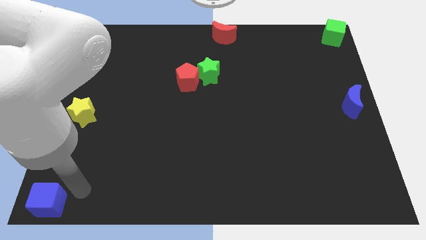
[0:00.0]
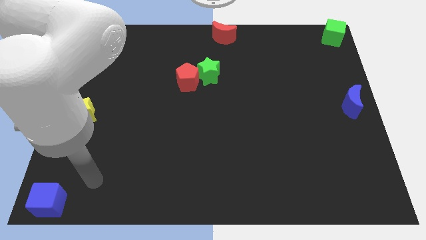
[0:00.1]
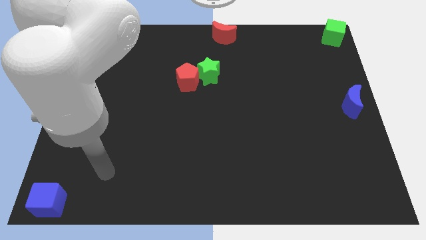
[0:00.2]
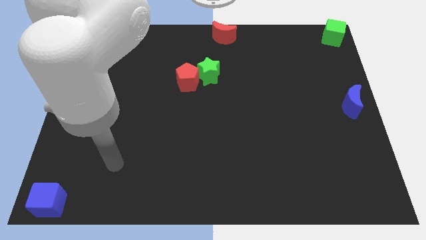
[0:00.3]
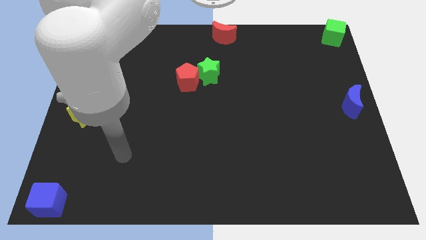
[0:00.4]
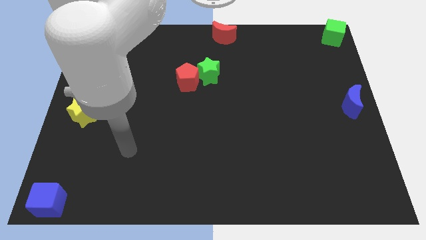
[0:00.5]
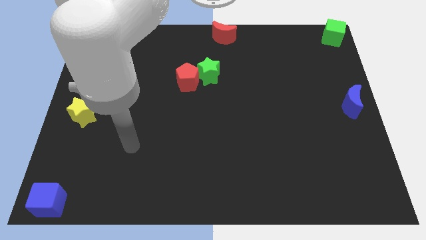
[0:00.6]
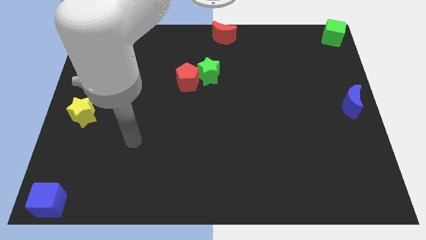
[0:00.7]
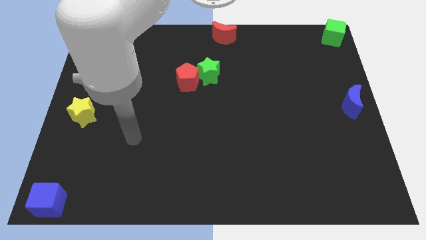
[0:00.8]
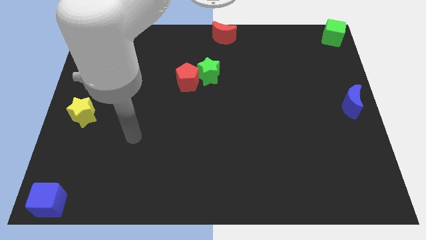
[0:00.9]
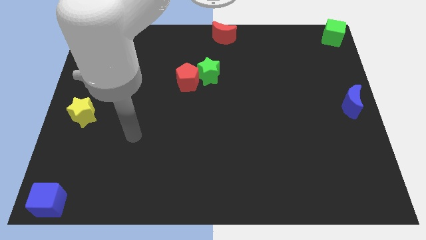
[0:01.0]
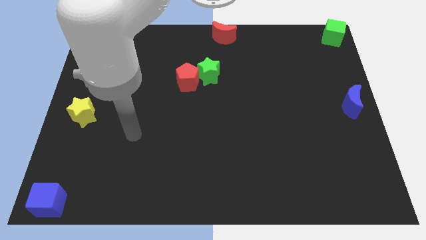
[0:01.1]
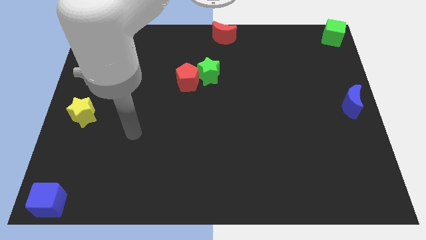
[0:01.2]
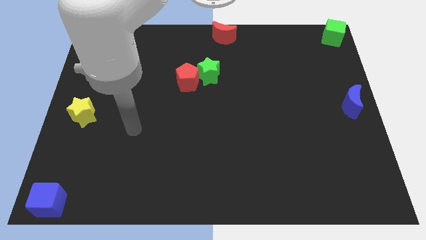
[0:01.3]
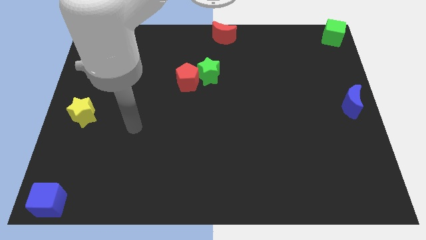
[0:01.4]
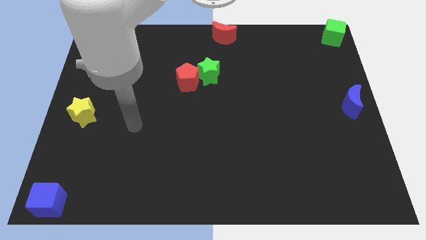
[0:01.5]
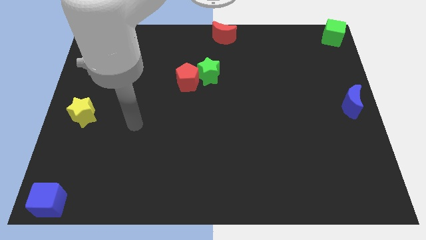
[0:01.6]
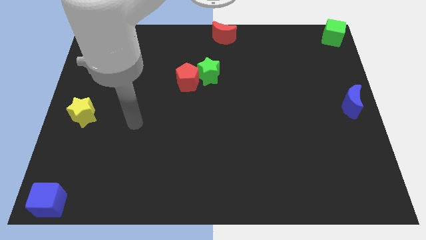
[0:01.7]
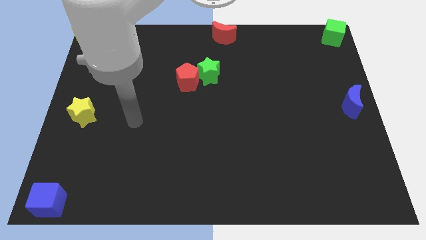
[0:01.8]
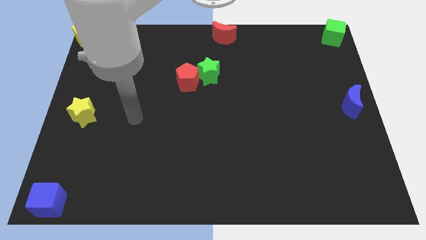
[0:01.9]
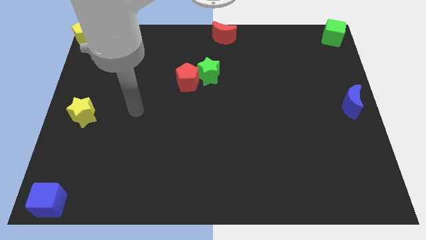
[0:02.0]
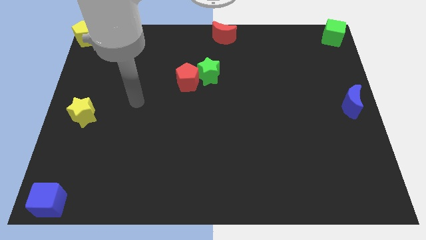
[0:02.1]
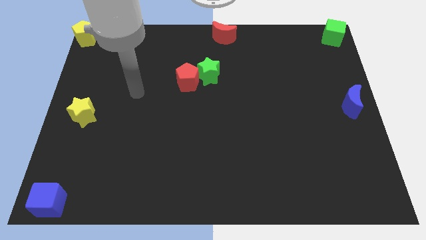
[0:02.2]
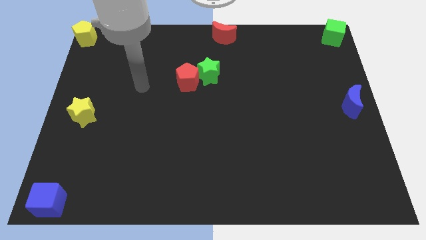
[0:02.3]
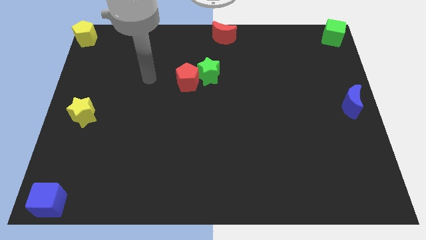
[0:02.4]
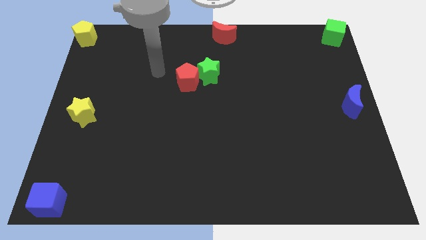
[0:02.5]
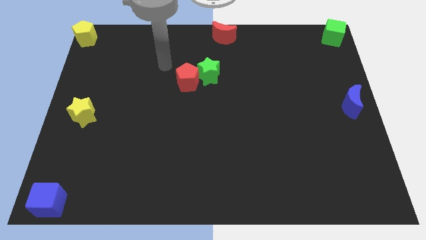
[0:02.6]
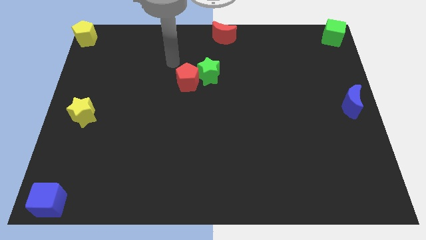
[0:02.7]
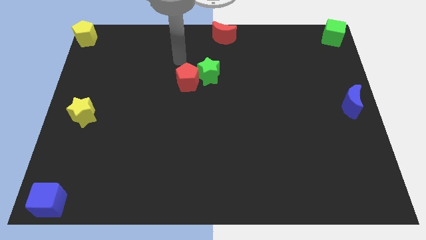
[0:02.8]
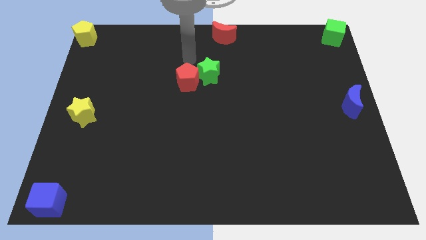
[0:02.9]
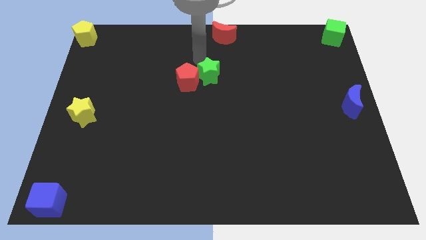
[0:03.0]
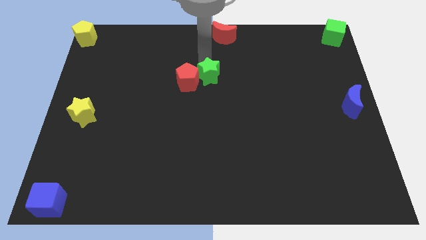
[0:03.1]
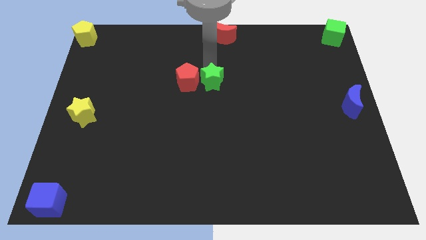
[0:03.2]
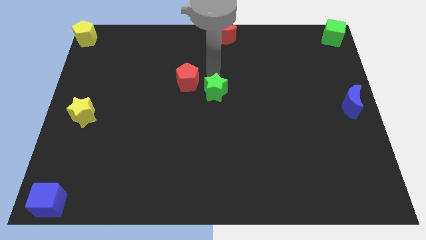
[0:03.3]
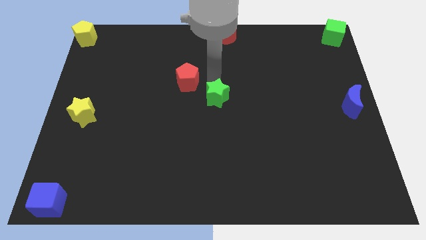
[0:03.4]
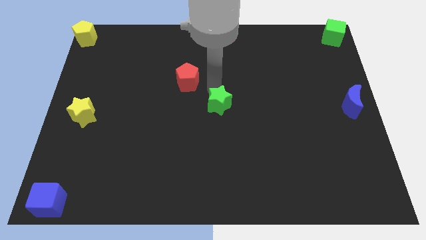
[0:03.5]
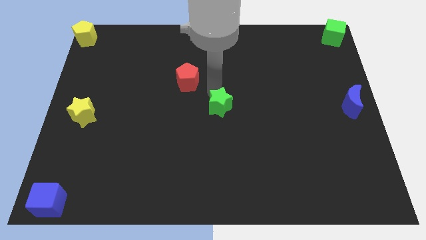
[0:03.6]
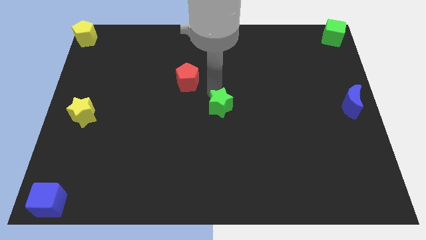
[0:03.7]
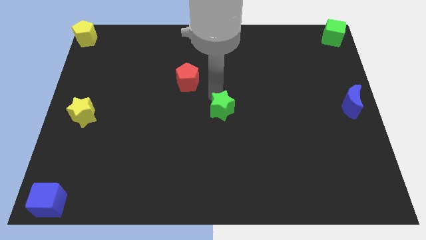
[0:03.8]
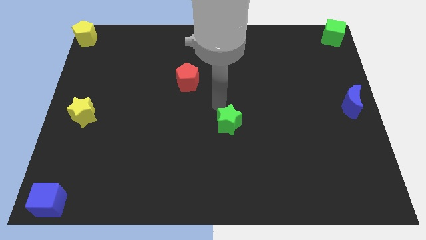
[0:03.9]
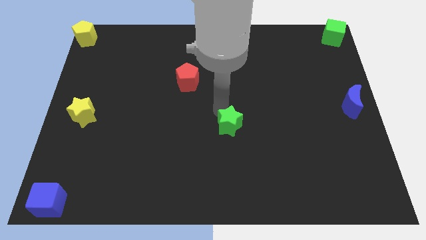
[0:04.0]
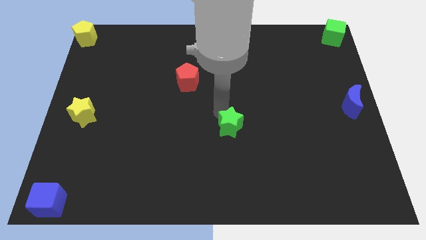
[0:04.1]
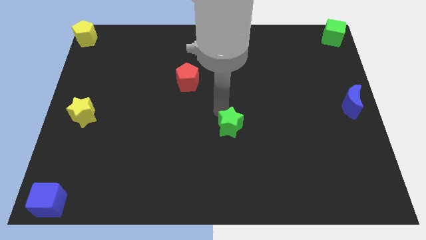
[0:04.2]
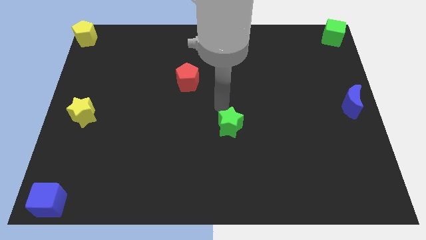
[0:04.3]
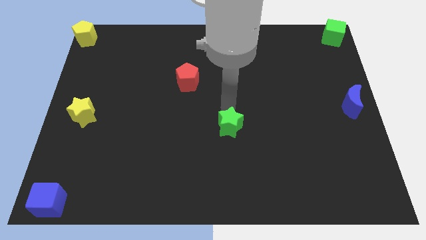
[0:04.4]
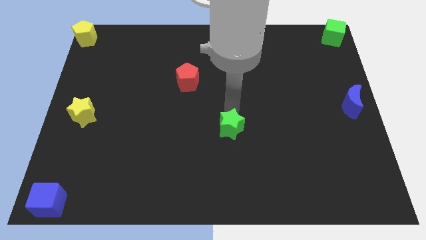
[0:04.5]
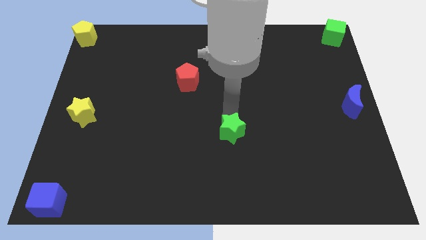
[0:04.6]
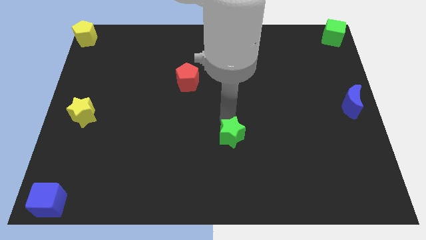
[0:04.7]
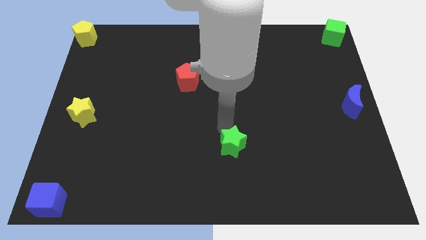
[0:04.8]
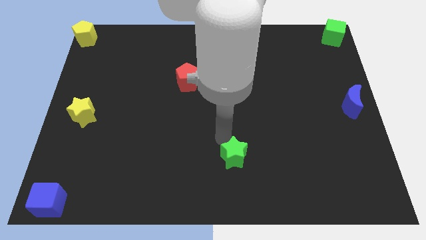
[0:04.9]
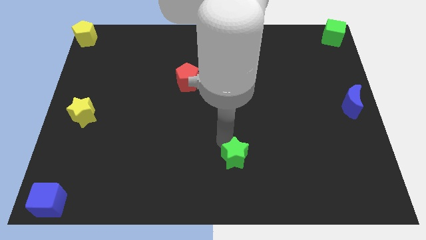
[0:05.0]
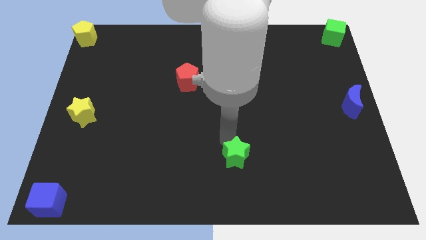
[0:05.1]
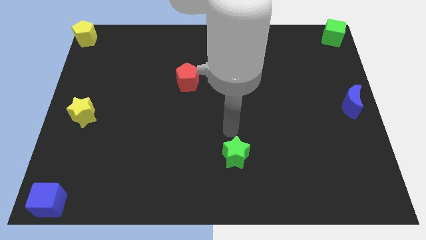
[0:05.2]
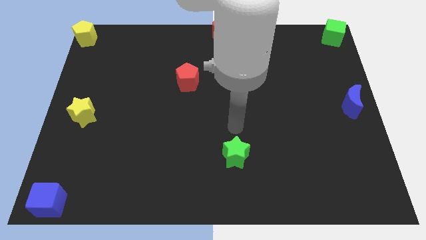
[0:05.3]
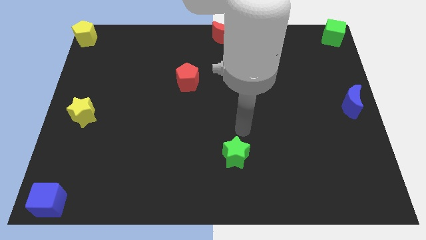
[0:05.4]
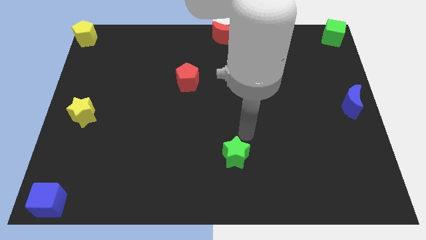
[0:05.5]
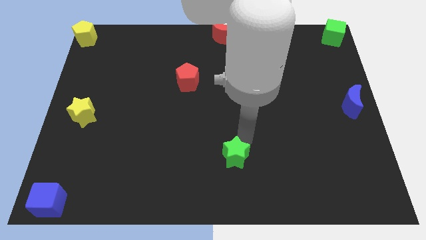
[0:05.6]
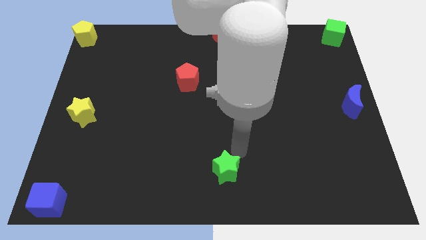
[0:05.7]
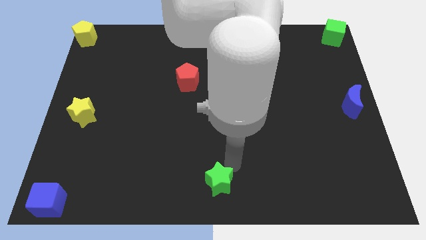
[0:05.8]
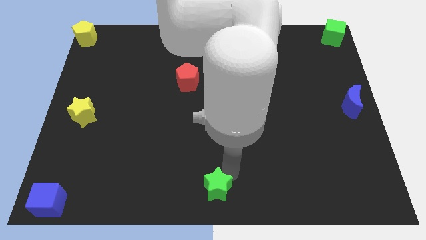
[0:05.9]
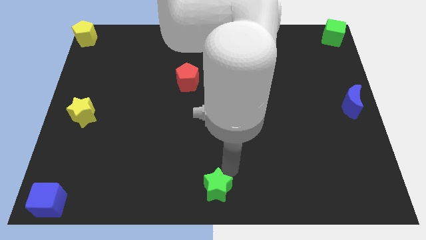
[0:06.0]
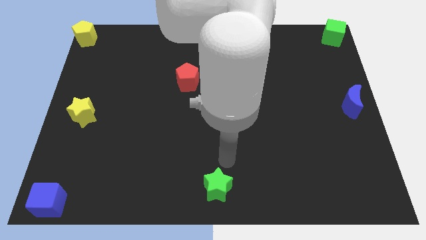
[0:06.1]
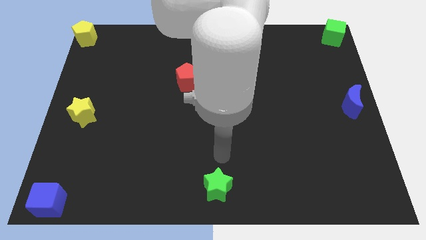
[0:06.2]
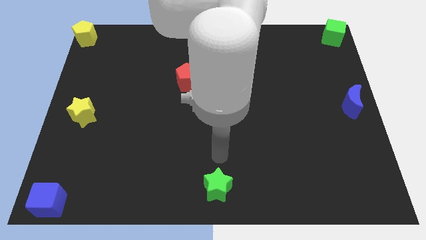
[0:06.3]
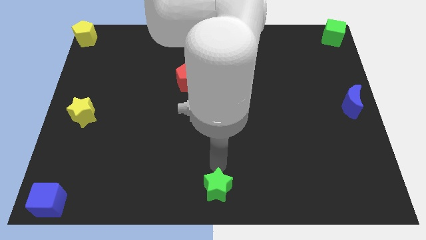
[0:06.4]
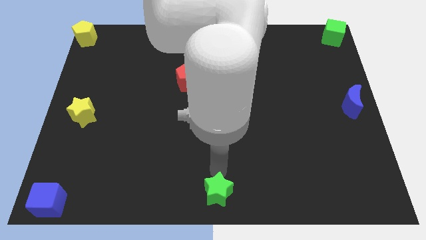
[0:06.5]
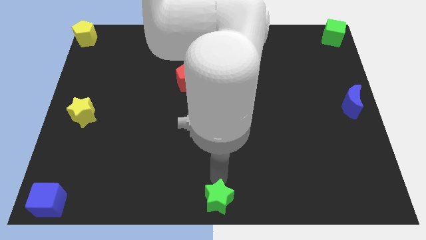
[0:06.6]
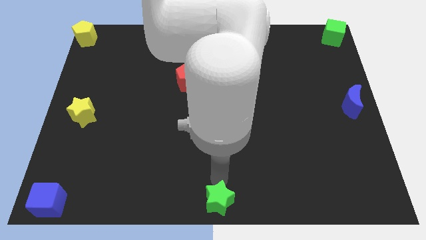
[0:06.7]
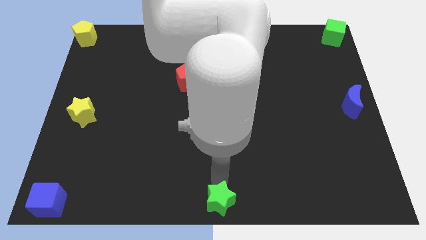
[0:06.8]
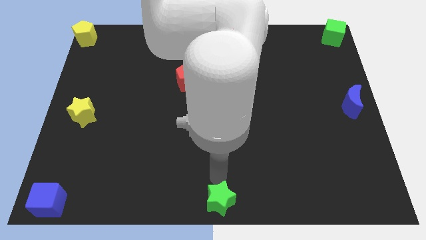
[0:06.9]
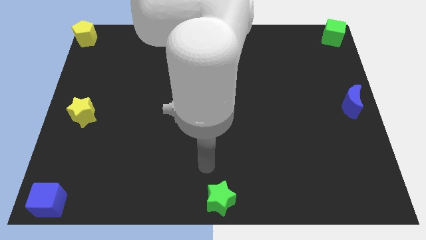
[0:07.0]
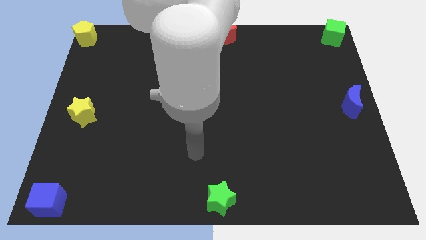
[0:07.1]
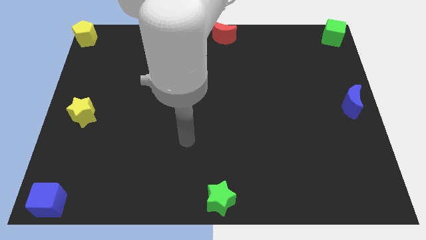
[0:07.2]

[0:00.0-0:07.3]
drag the green star to the bottom center

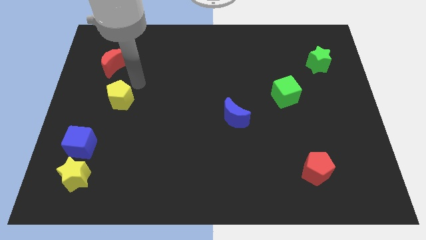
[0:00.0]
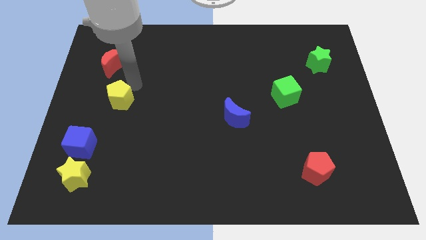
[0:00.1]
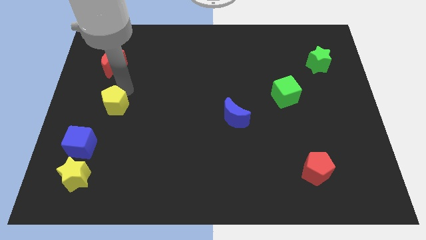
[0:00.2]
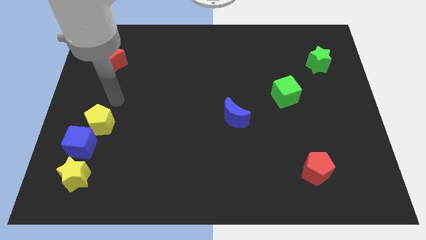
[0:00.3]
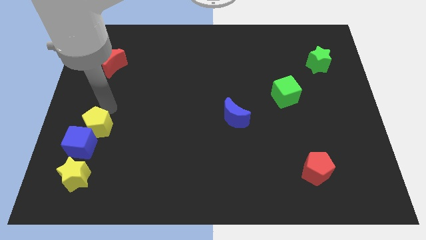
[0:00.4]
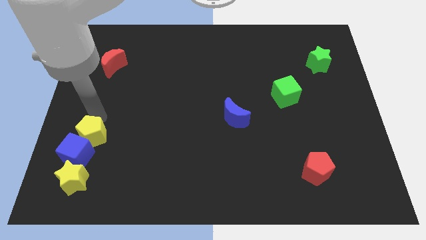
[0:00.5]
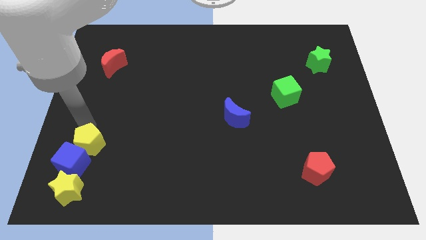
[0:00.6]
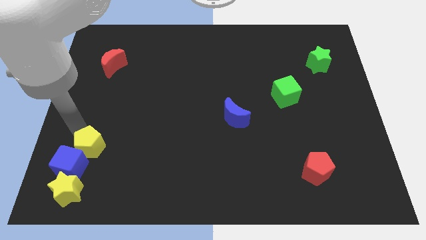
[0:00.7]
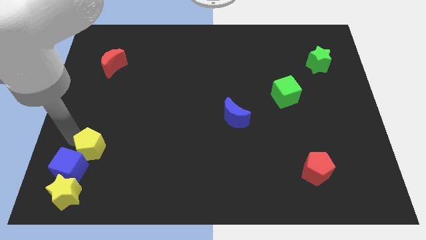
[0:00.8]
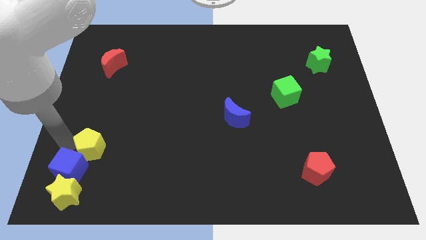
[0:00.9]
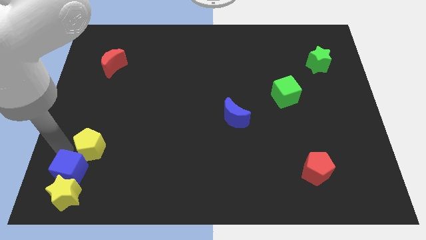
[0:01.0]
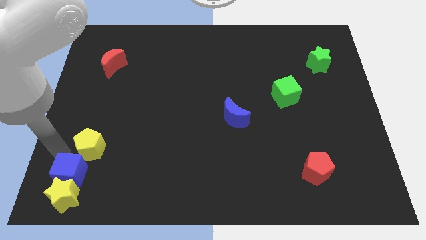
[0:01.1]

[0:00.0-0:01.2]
push yellow pentagon in to blue cube

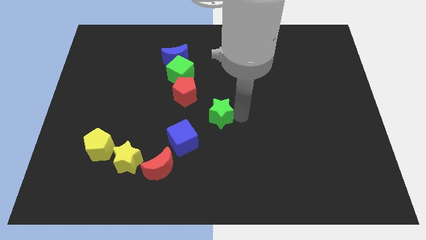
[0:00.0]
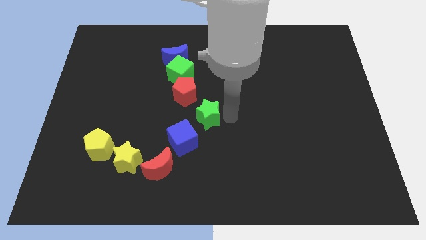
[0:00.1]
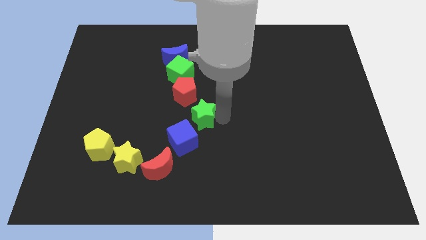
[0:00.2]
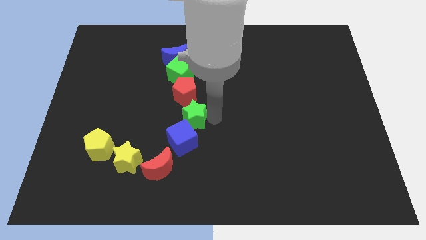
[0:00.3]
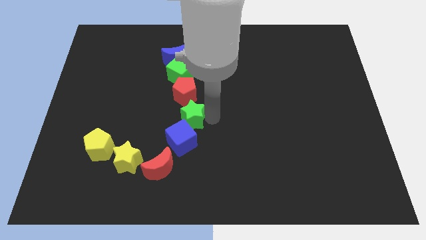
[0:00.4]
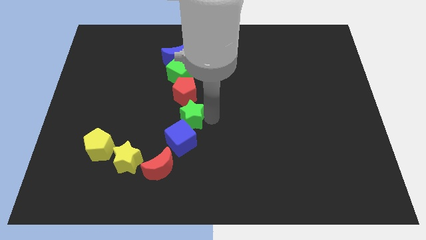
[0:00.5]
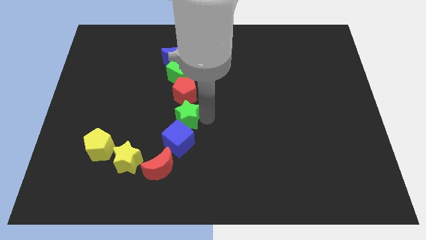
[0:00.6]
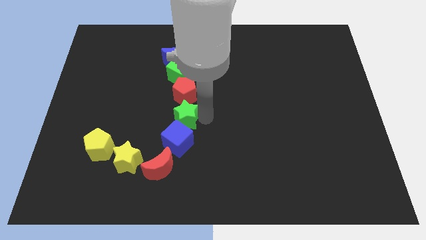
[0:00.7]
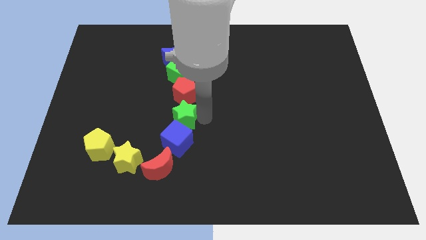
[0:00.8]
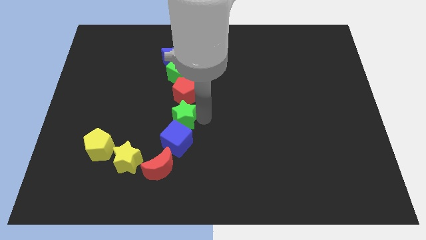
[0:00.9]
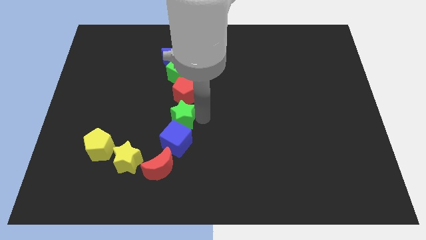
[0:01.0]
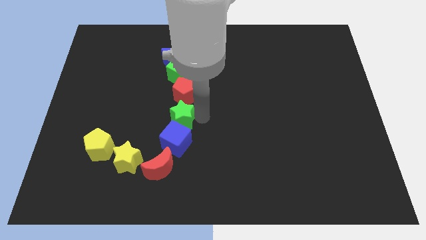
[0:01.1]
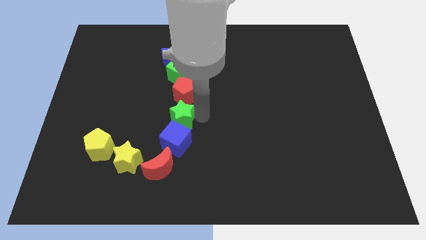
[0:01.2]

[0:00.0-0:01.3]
move the green star into the blue cube
